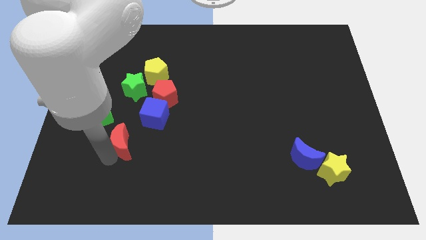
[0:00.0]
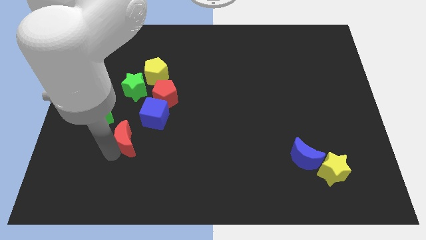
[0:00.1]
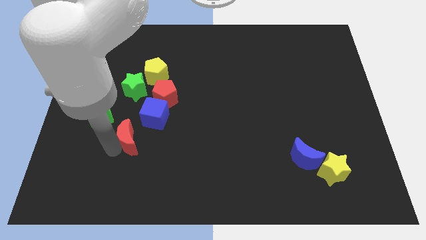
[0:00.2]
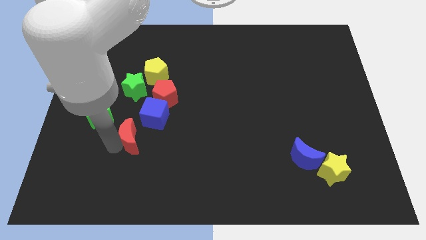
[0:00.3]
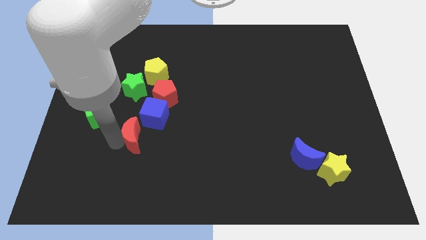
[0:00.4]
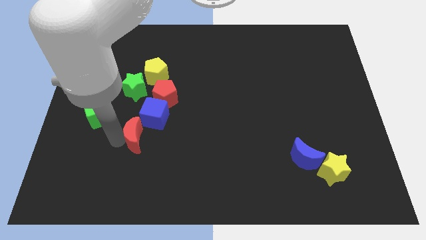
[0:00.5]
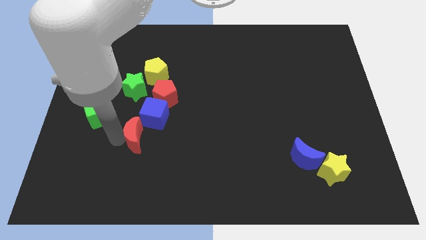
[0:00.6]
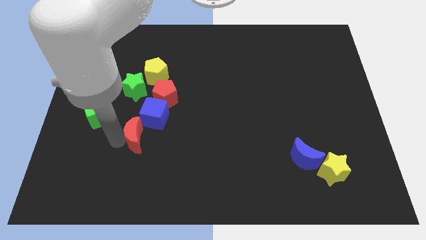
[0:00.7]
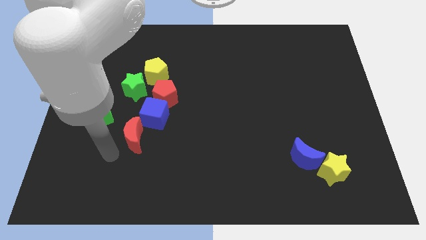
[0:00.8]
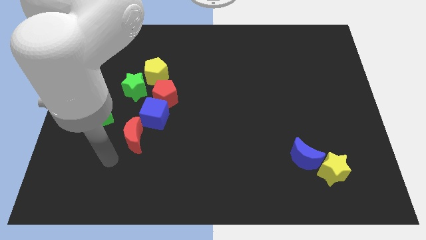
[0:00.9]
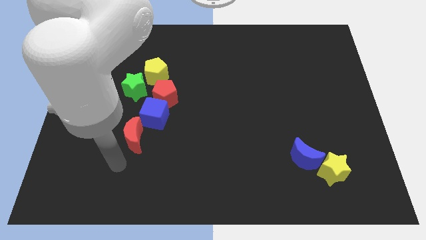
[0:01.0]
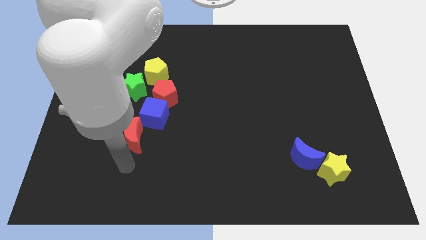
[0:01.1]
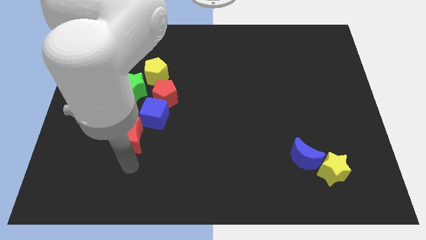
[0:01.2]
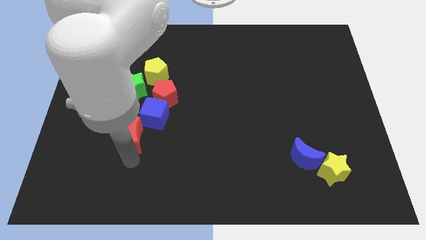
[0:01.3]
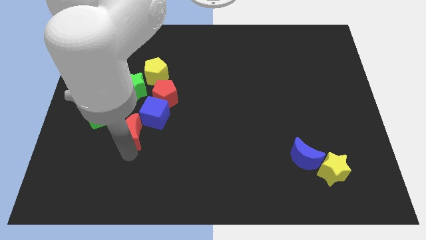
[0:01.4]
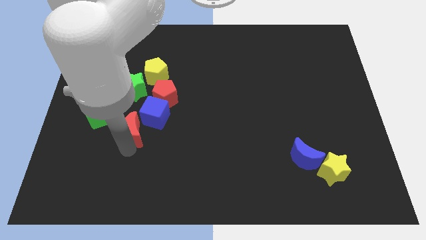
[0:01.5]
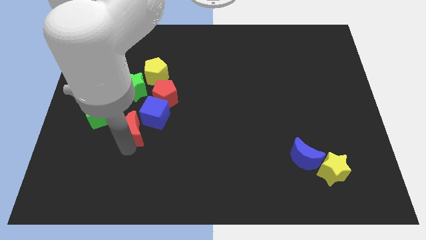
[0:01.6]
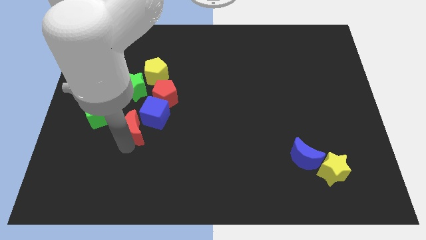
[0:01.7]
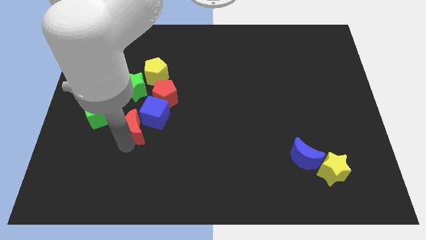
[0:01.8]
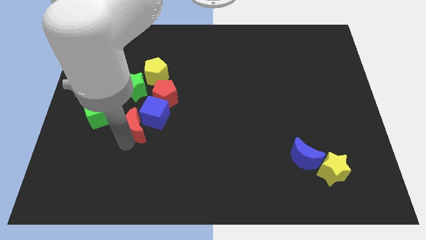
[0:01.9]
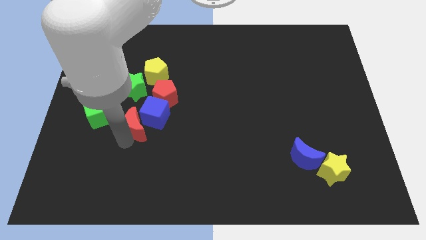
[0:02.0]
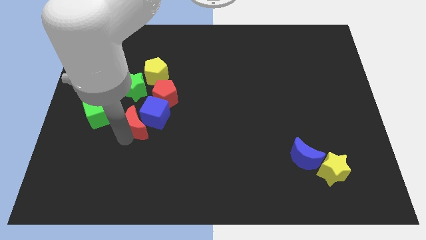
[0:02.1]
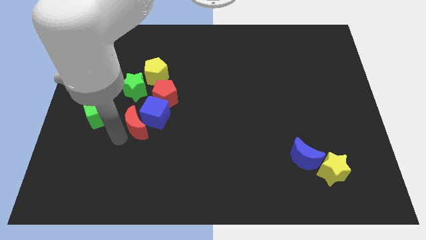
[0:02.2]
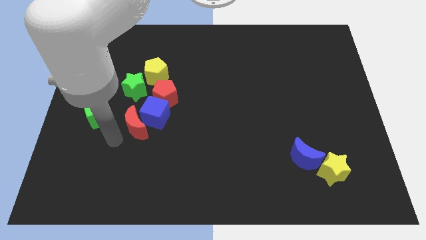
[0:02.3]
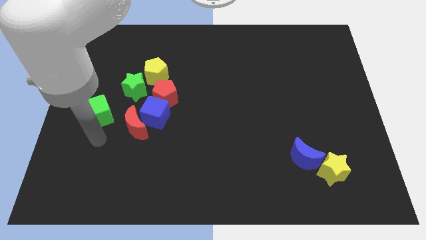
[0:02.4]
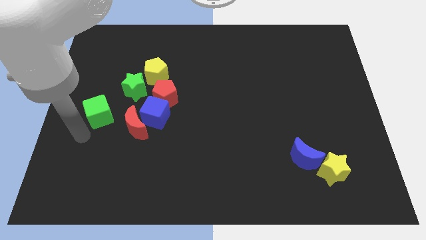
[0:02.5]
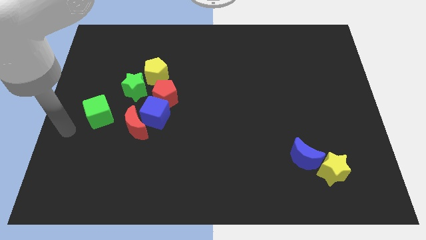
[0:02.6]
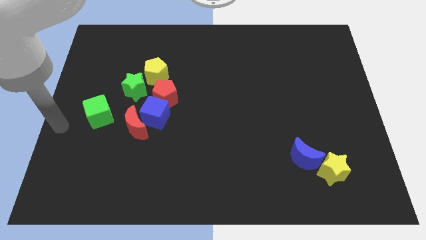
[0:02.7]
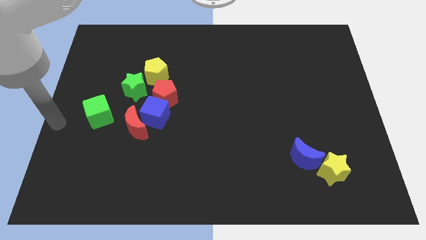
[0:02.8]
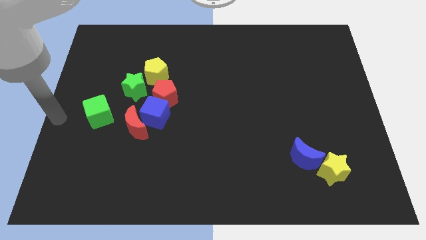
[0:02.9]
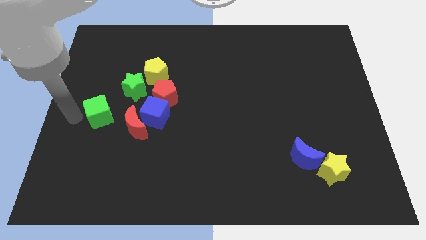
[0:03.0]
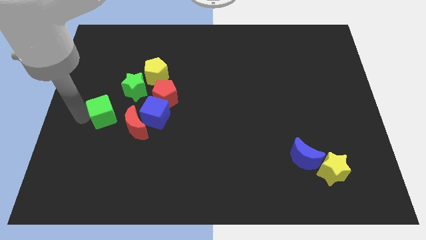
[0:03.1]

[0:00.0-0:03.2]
move red moon to the bottom left of blue cube

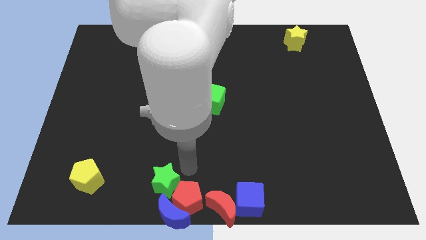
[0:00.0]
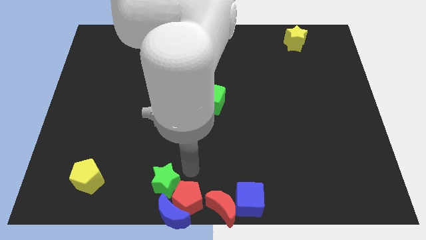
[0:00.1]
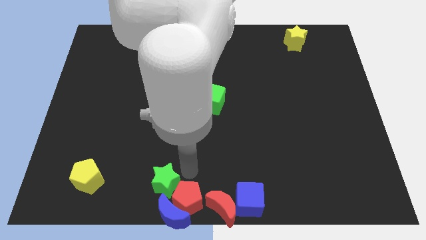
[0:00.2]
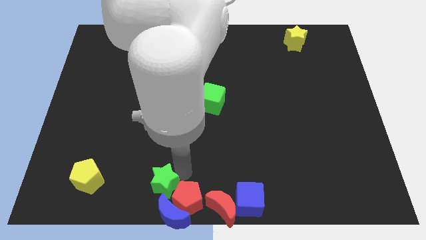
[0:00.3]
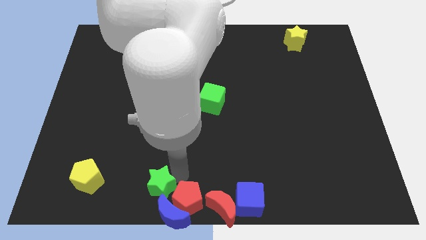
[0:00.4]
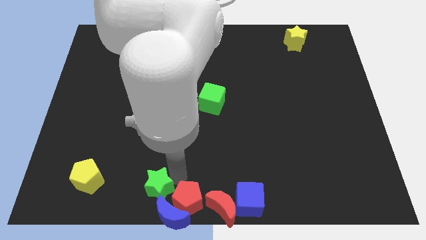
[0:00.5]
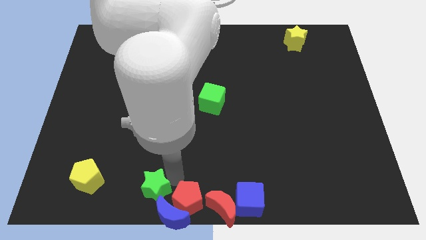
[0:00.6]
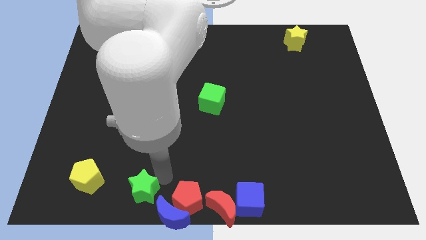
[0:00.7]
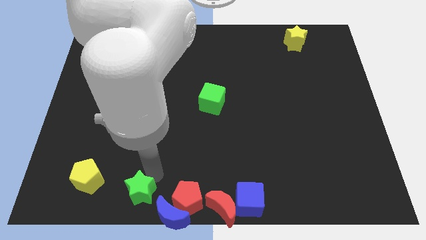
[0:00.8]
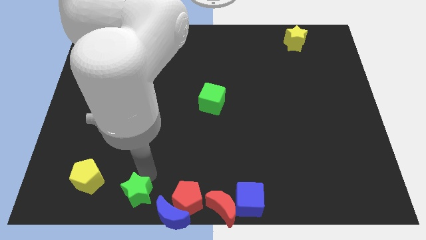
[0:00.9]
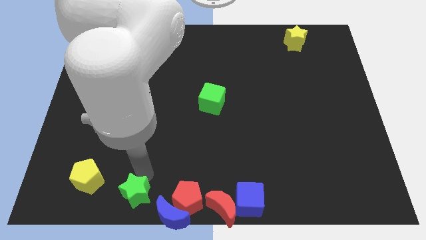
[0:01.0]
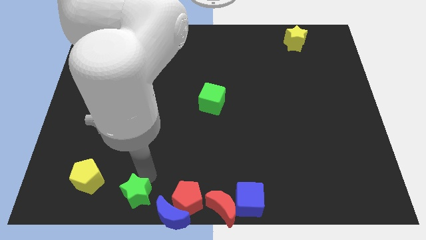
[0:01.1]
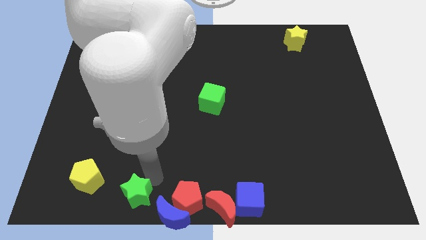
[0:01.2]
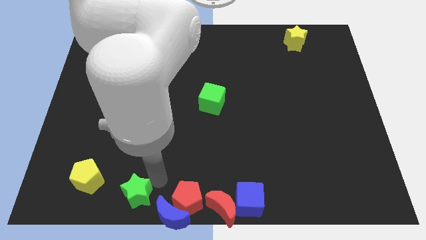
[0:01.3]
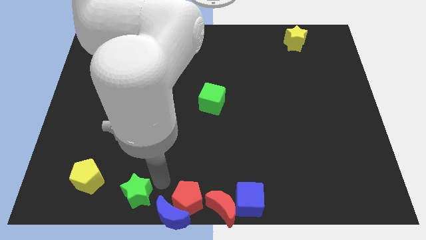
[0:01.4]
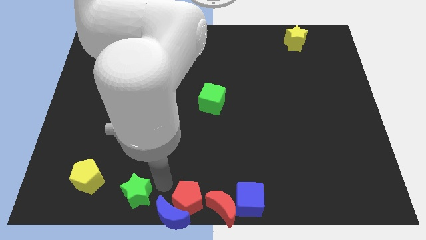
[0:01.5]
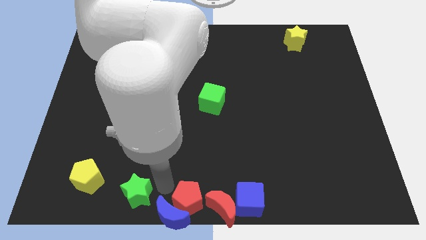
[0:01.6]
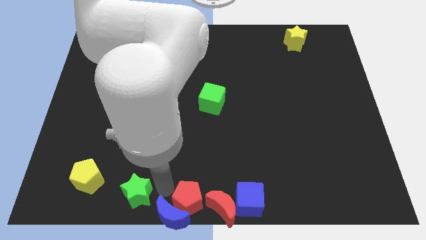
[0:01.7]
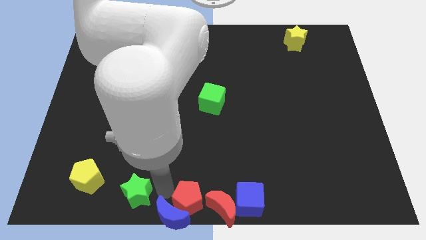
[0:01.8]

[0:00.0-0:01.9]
push the green star slightly to the left

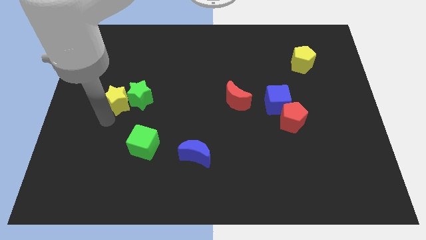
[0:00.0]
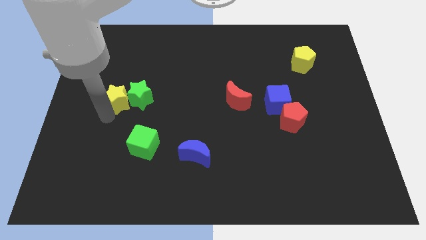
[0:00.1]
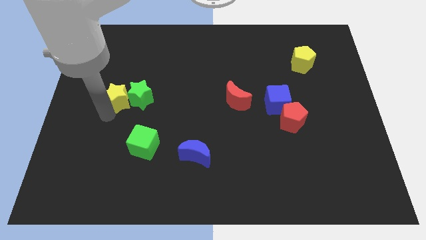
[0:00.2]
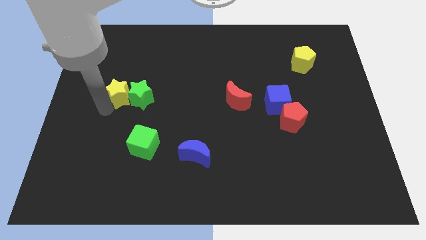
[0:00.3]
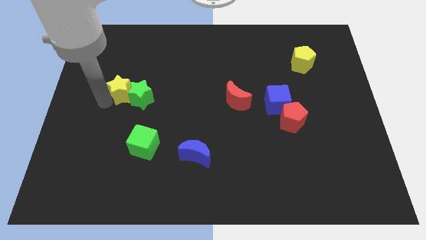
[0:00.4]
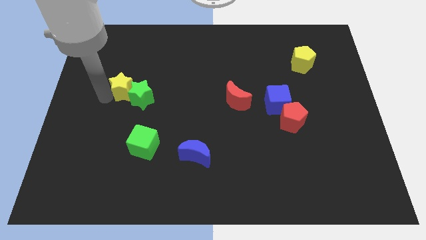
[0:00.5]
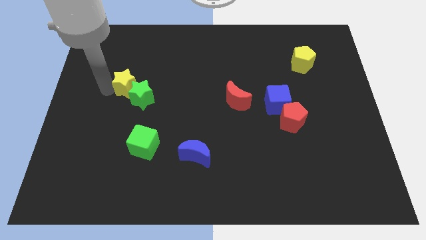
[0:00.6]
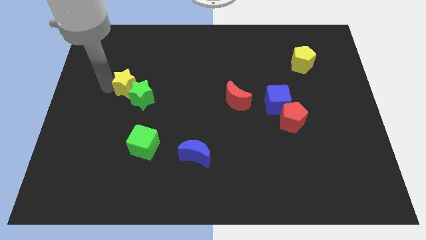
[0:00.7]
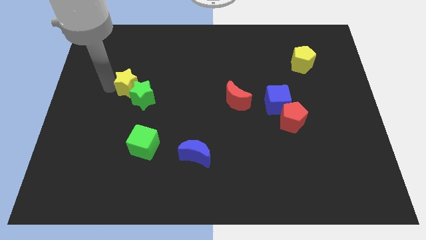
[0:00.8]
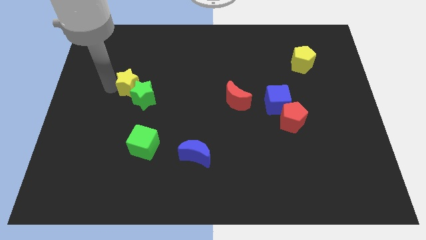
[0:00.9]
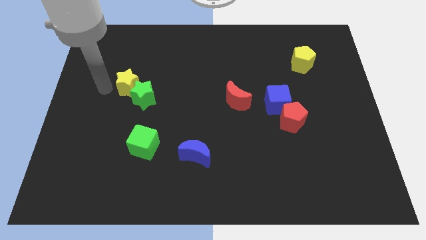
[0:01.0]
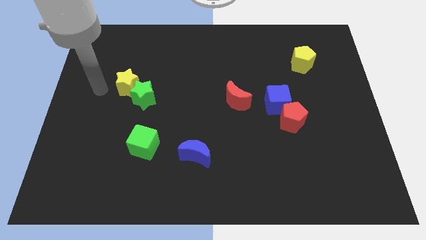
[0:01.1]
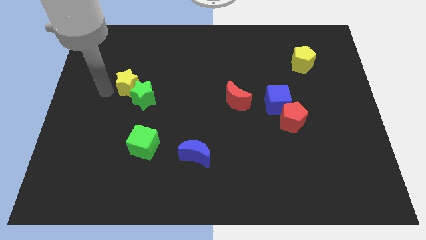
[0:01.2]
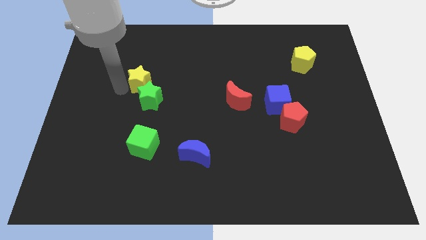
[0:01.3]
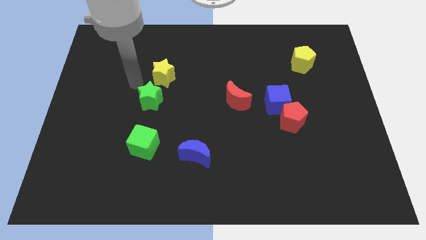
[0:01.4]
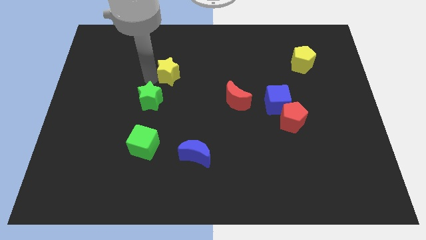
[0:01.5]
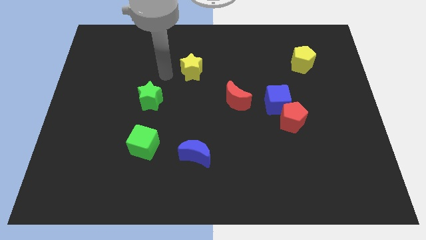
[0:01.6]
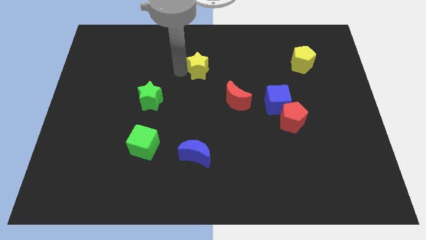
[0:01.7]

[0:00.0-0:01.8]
push the yellow star towards the top center

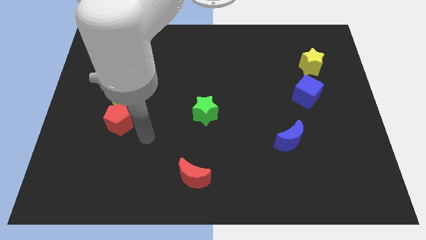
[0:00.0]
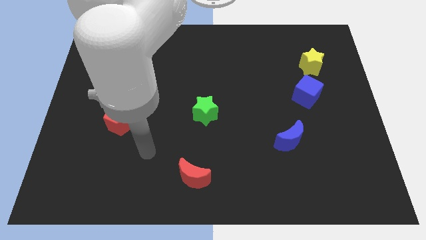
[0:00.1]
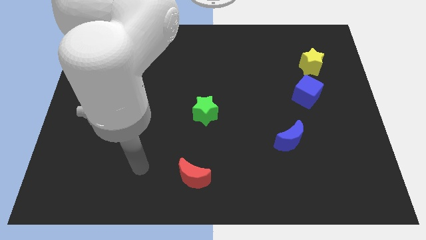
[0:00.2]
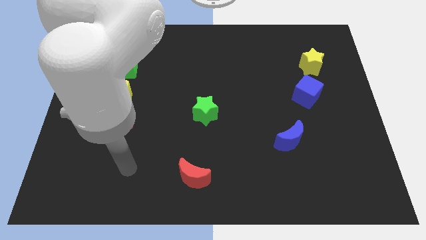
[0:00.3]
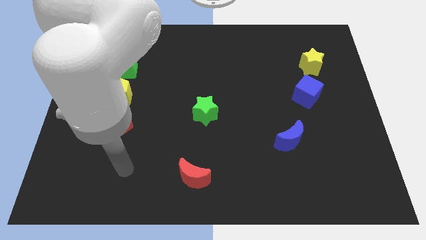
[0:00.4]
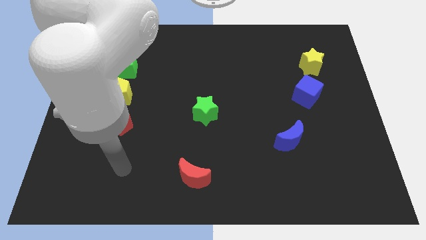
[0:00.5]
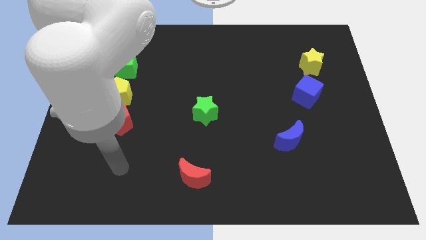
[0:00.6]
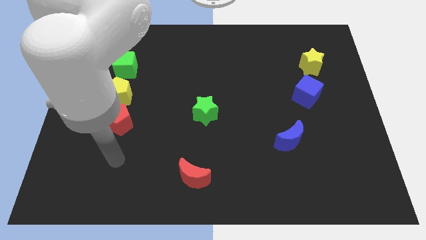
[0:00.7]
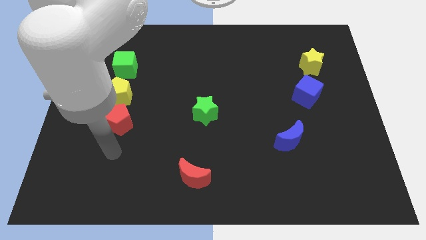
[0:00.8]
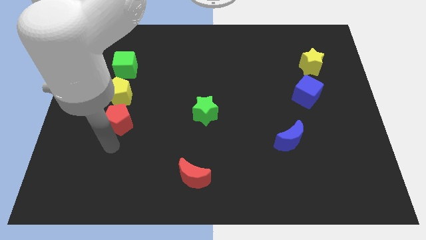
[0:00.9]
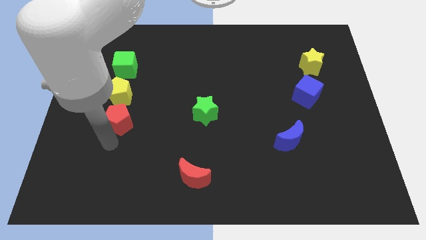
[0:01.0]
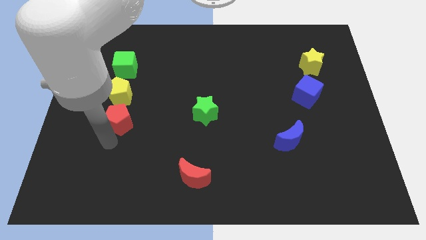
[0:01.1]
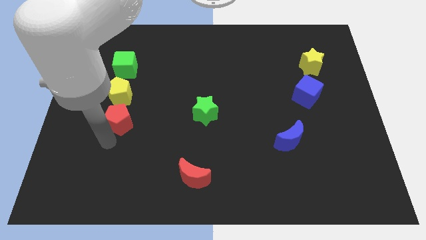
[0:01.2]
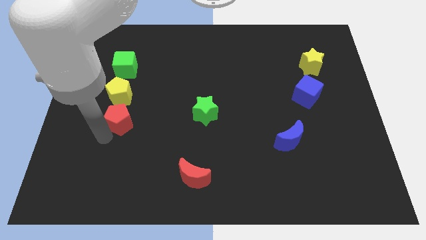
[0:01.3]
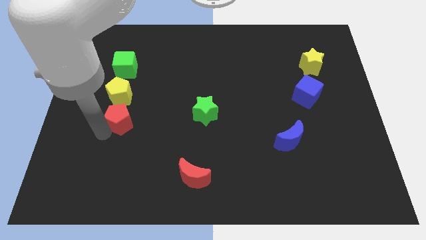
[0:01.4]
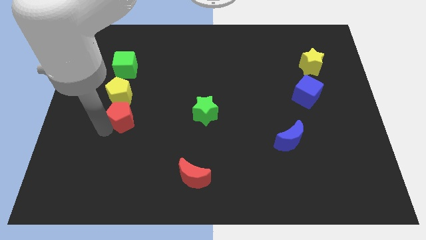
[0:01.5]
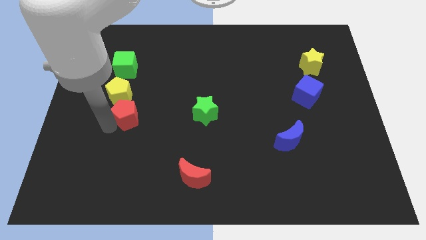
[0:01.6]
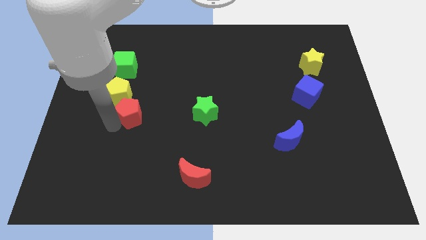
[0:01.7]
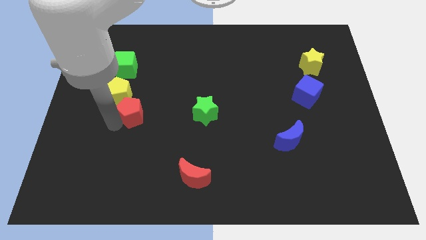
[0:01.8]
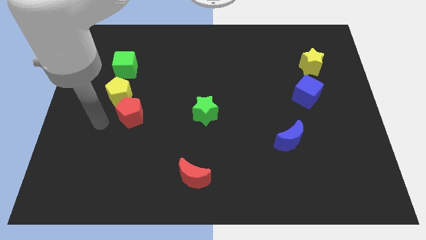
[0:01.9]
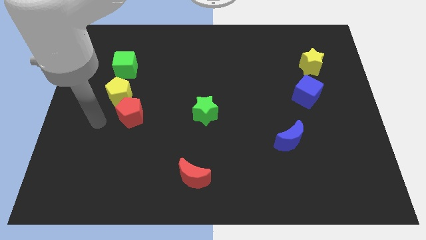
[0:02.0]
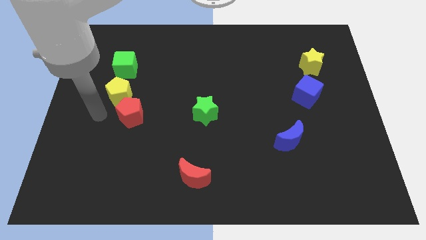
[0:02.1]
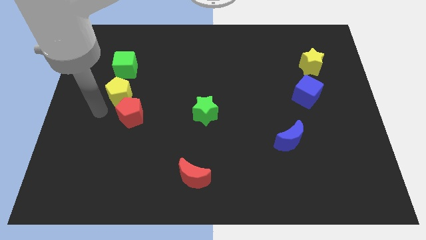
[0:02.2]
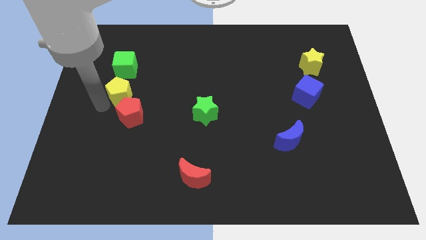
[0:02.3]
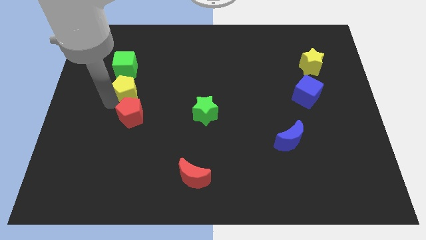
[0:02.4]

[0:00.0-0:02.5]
slightly move the red pentagon to the right of the board
